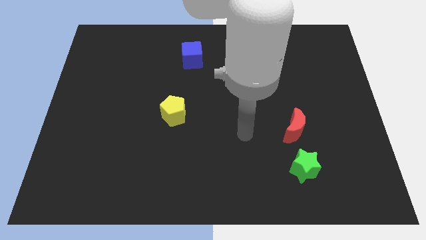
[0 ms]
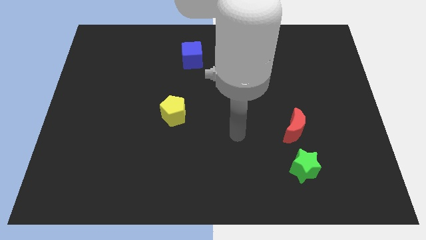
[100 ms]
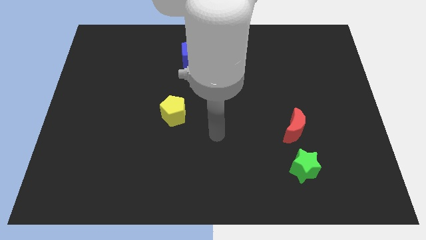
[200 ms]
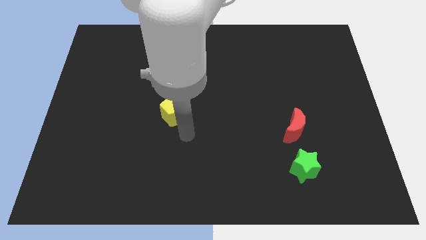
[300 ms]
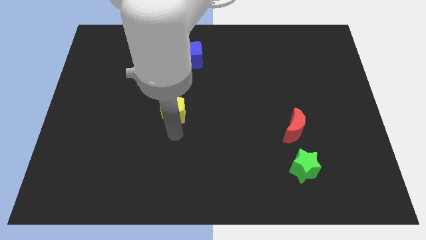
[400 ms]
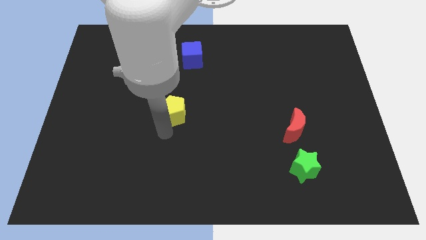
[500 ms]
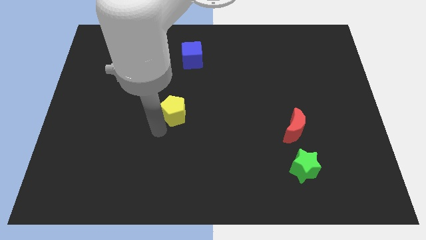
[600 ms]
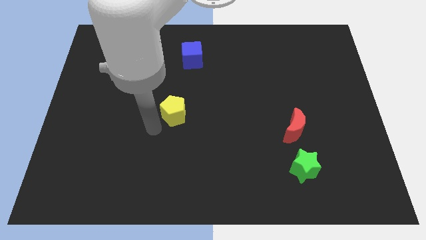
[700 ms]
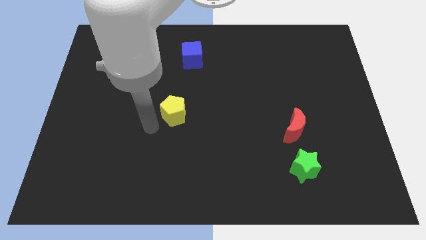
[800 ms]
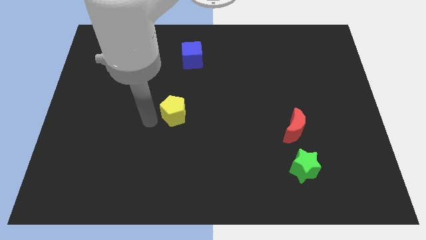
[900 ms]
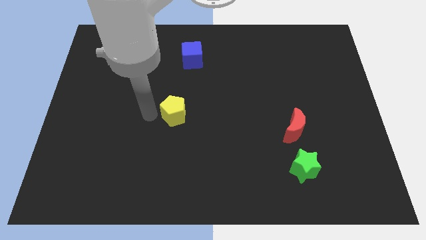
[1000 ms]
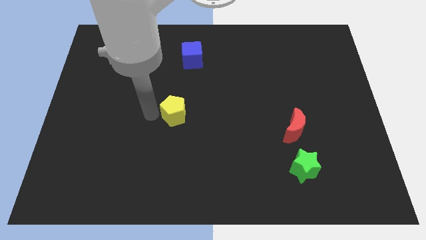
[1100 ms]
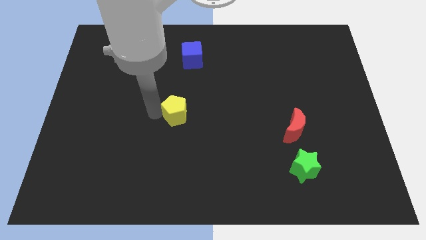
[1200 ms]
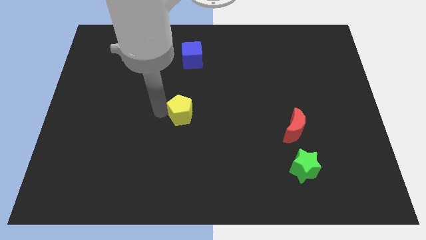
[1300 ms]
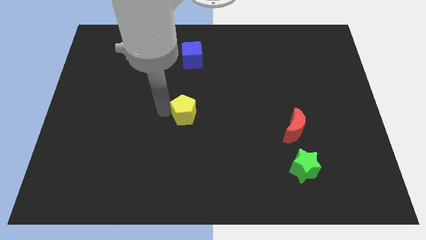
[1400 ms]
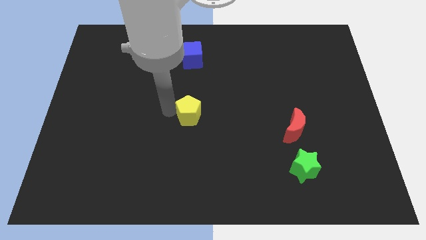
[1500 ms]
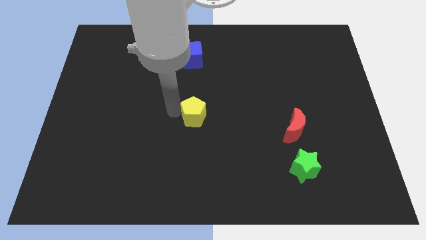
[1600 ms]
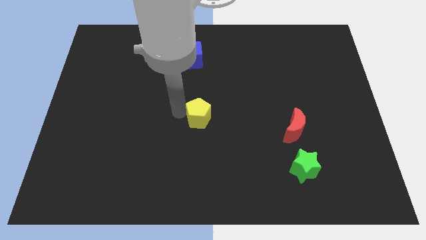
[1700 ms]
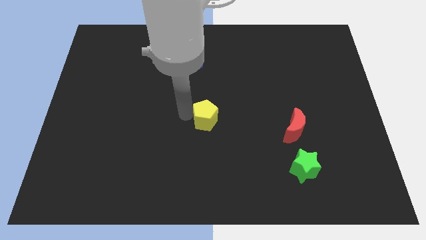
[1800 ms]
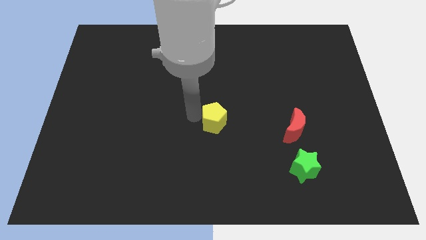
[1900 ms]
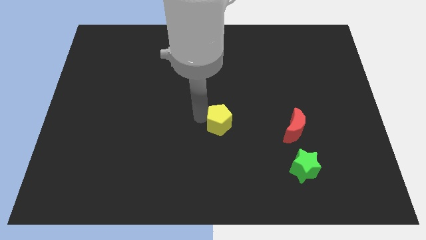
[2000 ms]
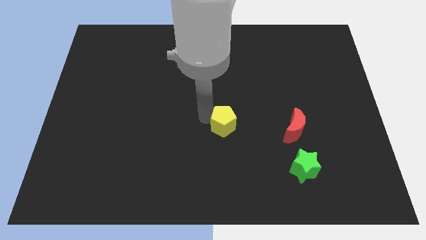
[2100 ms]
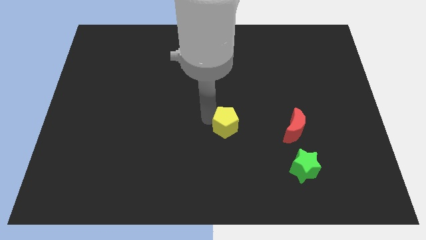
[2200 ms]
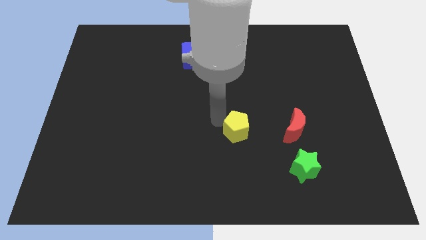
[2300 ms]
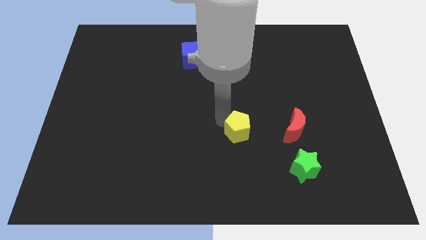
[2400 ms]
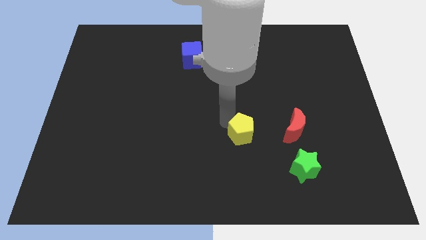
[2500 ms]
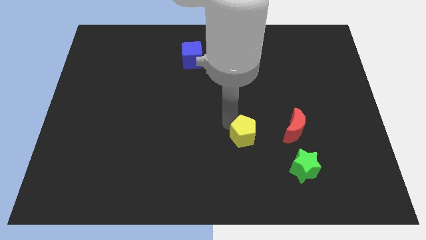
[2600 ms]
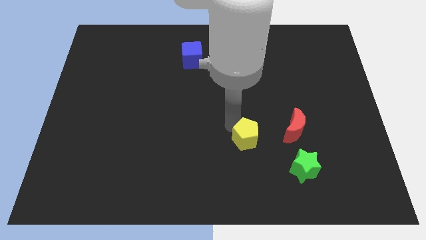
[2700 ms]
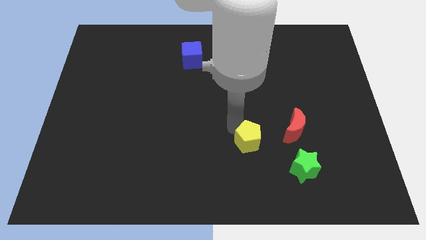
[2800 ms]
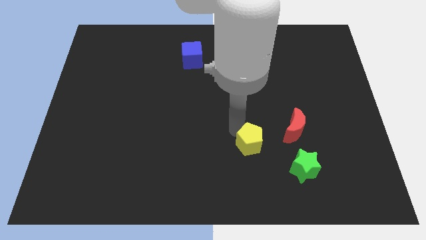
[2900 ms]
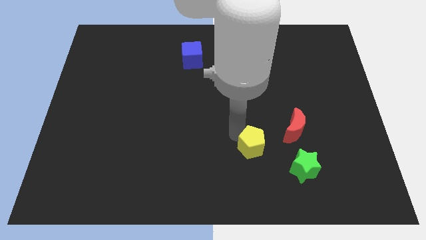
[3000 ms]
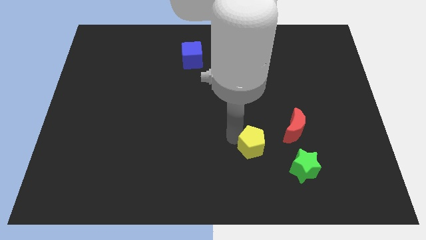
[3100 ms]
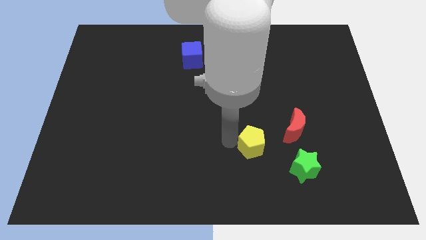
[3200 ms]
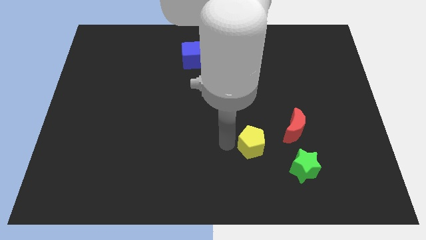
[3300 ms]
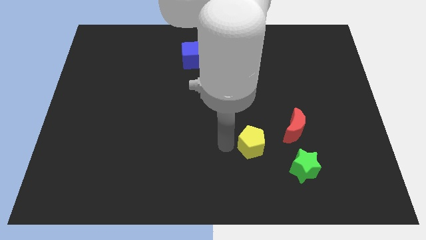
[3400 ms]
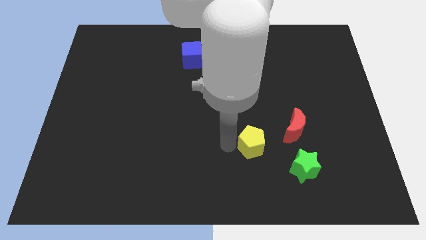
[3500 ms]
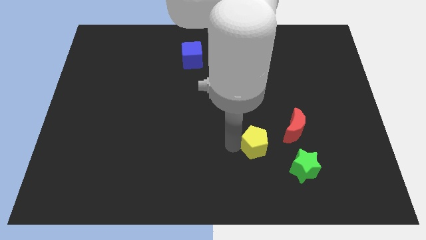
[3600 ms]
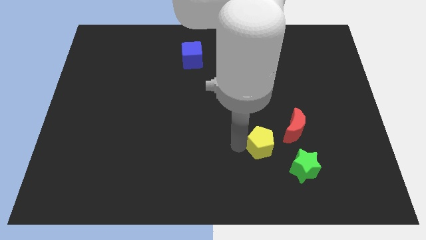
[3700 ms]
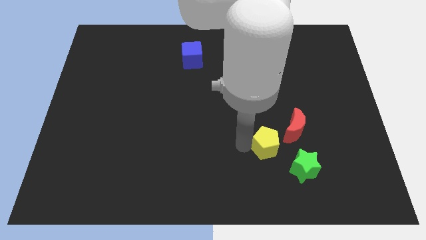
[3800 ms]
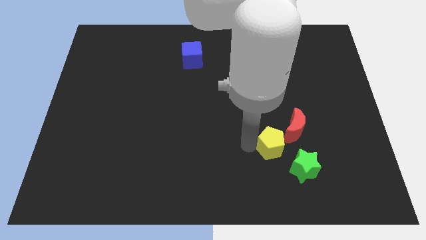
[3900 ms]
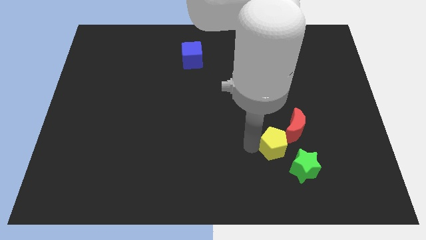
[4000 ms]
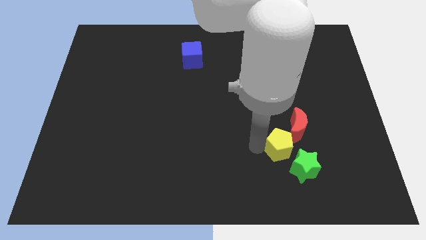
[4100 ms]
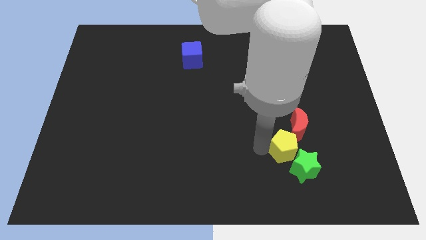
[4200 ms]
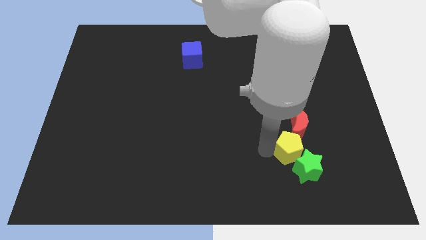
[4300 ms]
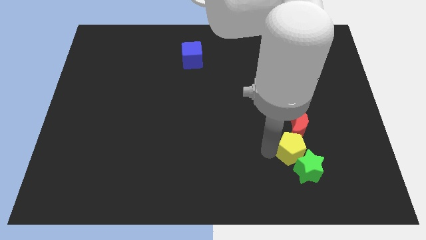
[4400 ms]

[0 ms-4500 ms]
put the yellow pentagon towards the star

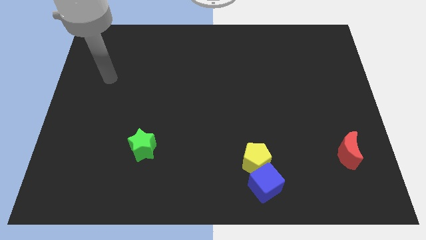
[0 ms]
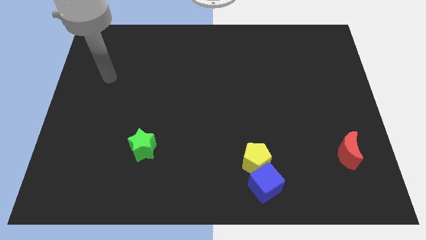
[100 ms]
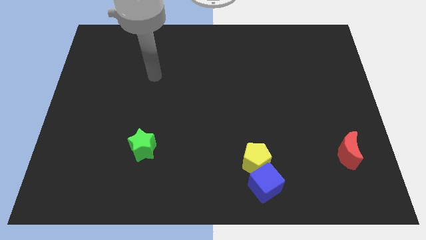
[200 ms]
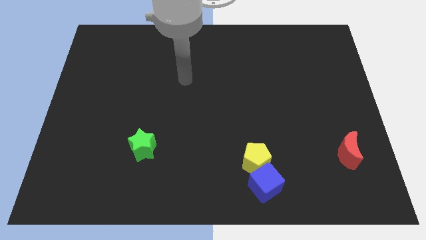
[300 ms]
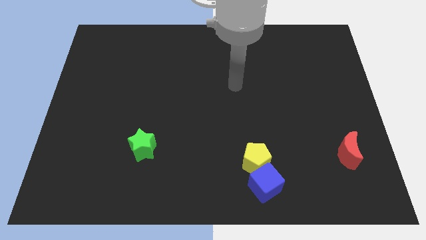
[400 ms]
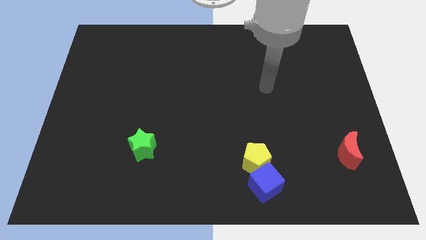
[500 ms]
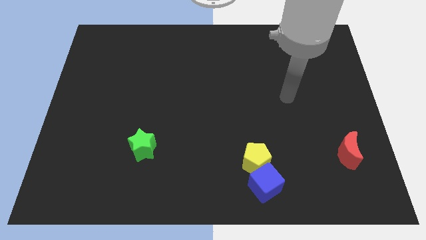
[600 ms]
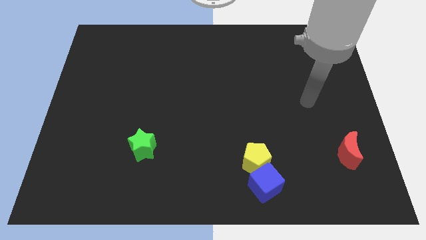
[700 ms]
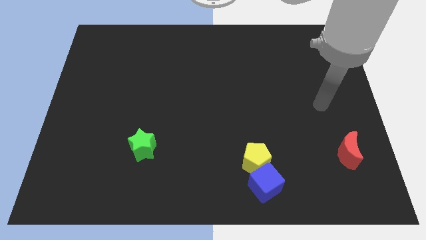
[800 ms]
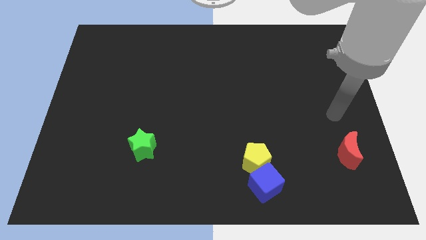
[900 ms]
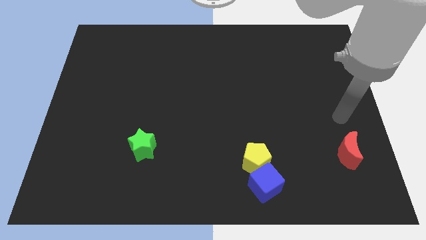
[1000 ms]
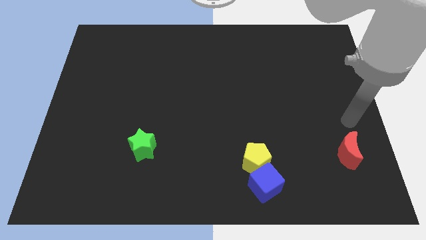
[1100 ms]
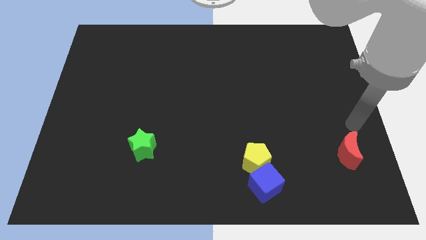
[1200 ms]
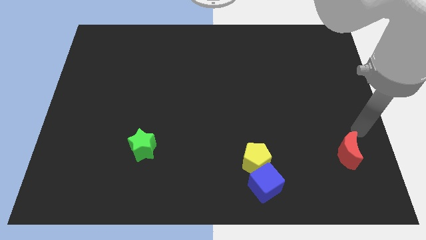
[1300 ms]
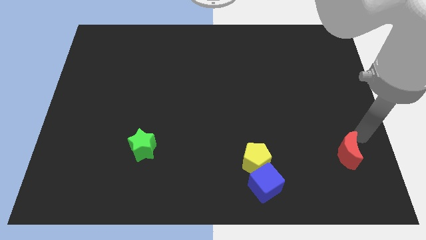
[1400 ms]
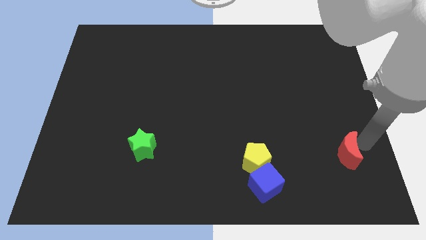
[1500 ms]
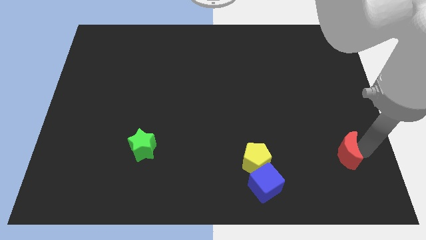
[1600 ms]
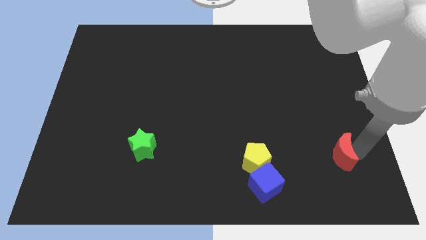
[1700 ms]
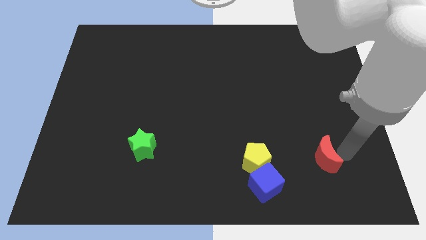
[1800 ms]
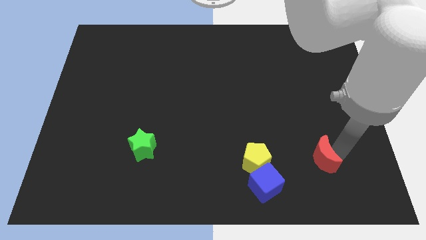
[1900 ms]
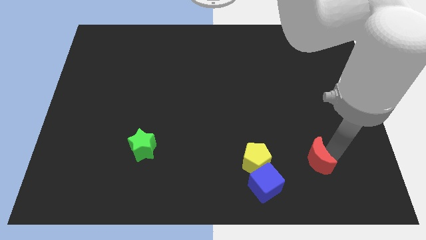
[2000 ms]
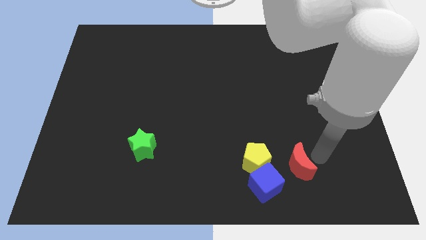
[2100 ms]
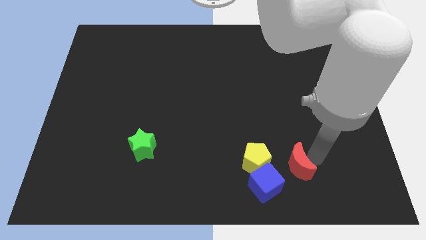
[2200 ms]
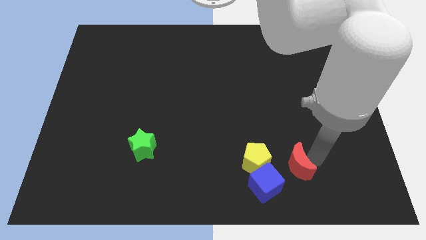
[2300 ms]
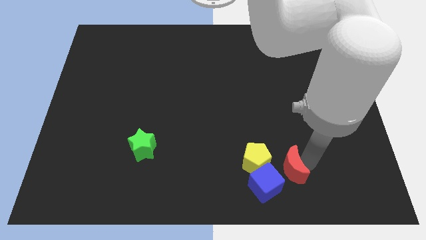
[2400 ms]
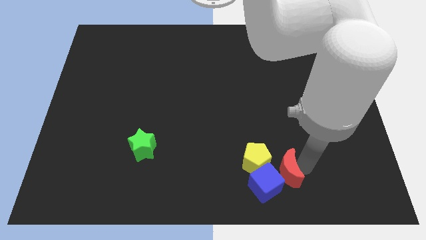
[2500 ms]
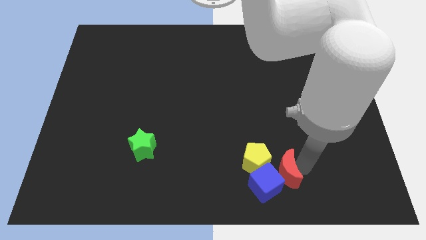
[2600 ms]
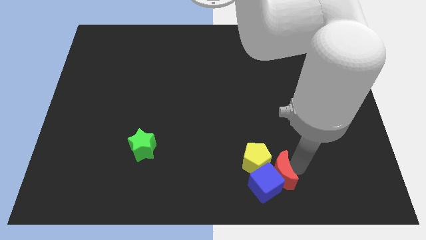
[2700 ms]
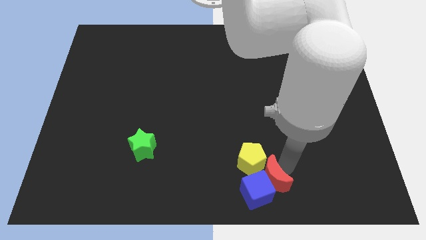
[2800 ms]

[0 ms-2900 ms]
slide the red moon towards the pentagon

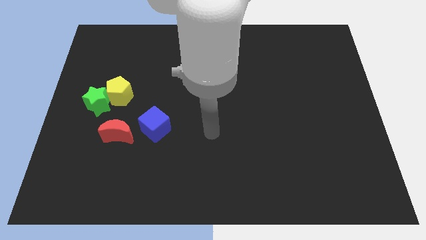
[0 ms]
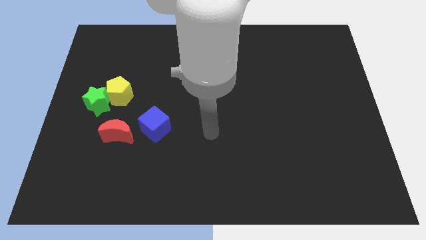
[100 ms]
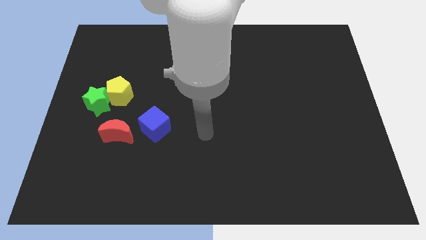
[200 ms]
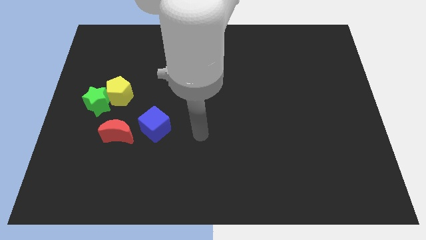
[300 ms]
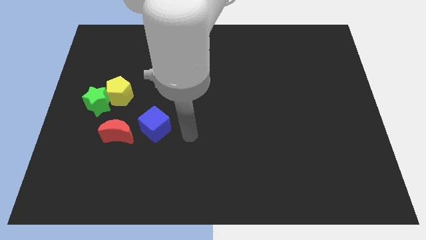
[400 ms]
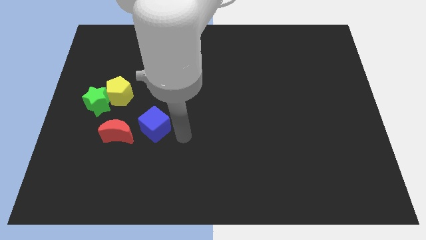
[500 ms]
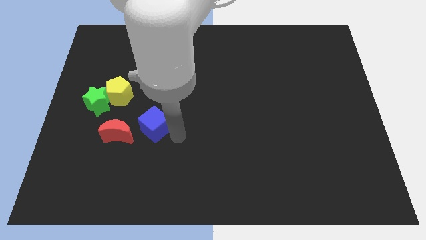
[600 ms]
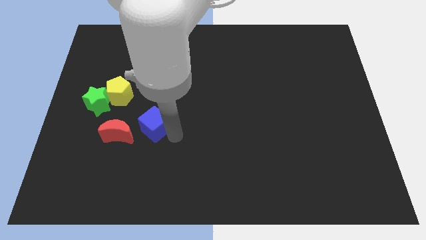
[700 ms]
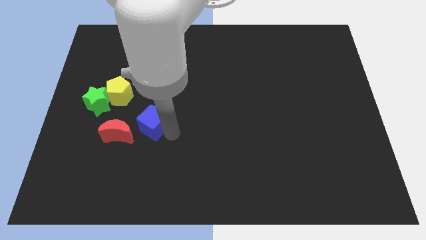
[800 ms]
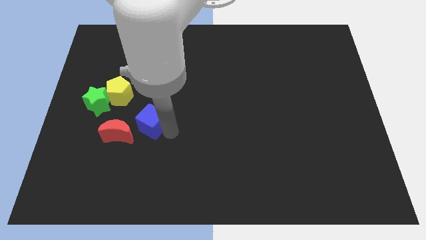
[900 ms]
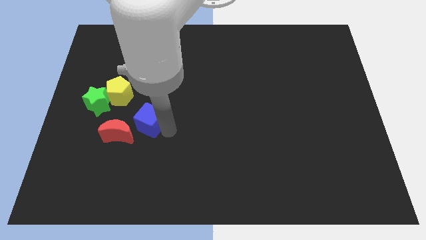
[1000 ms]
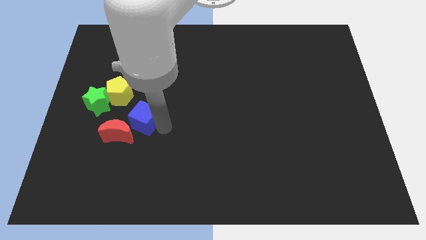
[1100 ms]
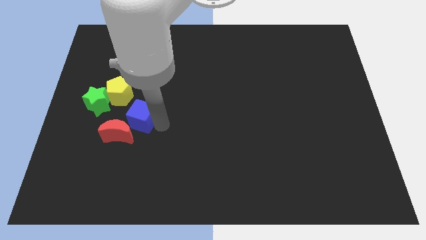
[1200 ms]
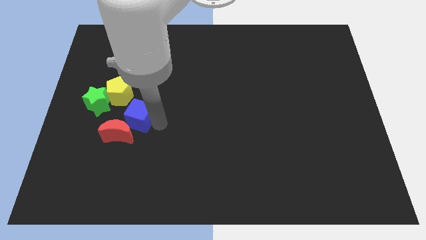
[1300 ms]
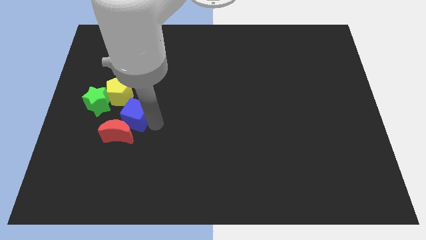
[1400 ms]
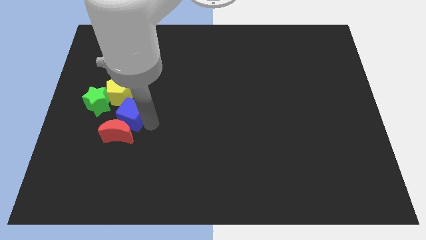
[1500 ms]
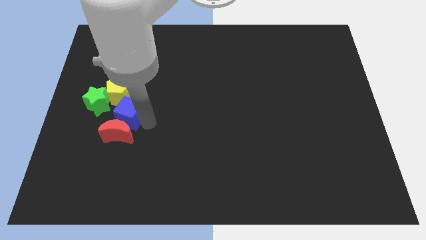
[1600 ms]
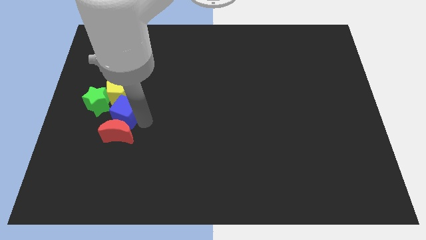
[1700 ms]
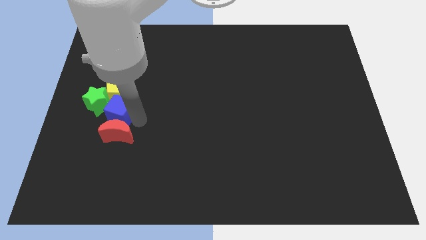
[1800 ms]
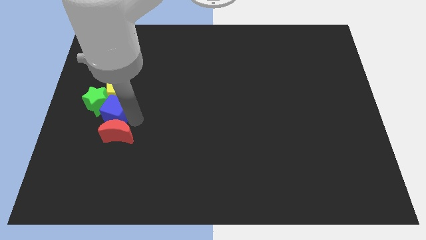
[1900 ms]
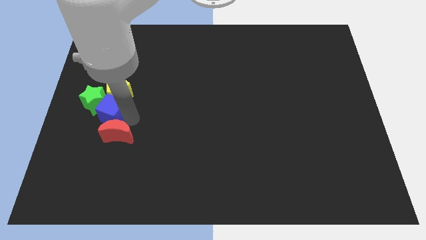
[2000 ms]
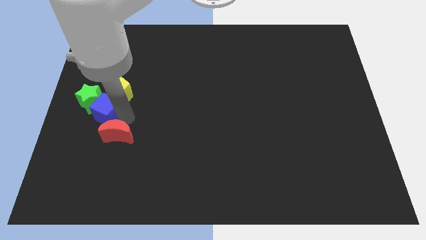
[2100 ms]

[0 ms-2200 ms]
slide the blue block towards the star
